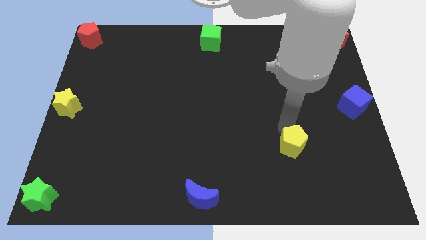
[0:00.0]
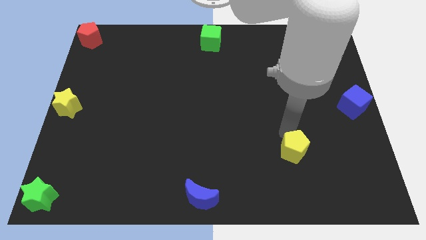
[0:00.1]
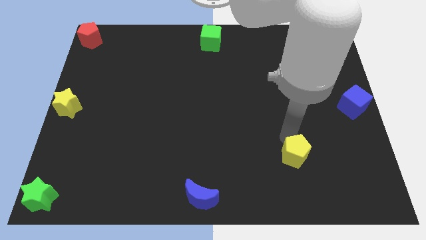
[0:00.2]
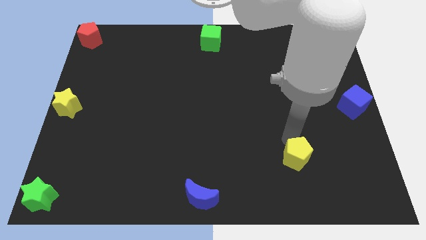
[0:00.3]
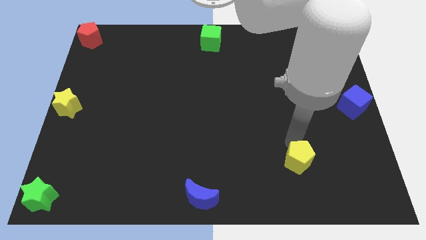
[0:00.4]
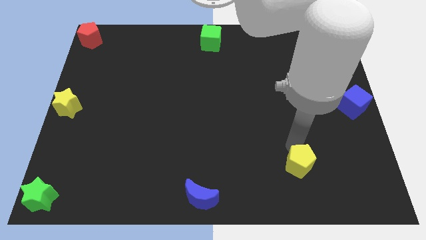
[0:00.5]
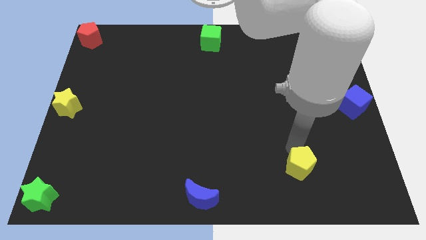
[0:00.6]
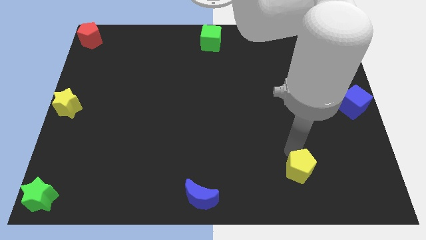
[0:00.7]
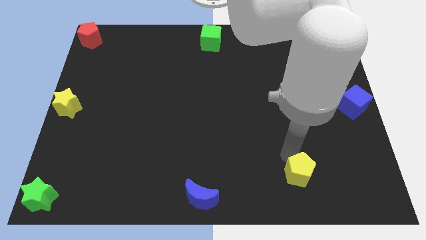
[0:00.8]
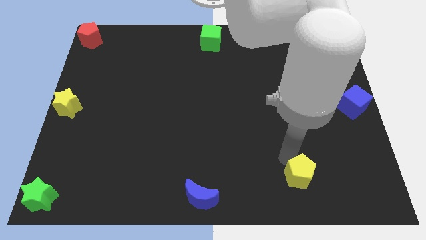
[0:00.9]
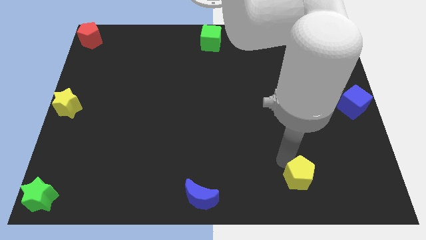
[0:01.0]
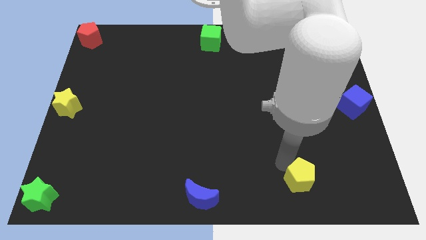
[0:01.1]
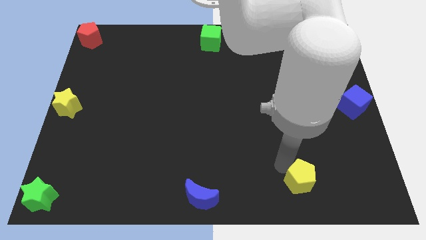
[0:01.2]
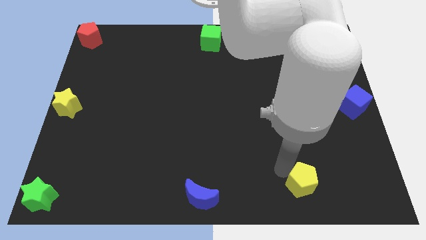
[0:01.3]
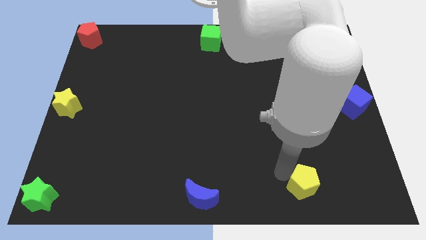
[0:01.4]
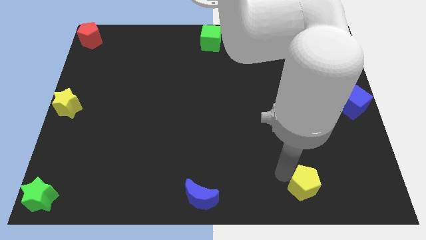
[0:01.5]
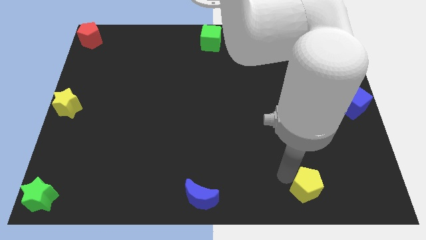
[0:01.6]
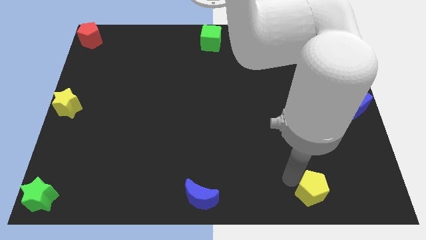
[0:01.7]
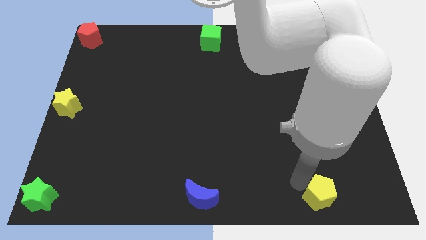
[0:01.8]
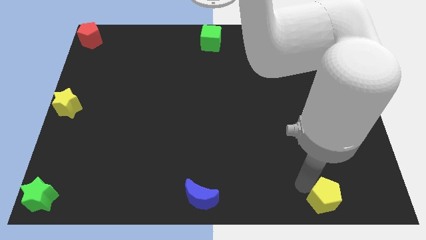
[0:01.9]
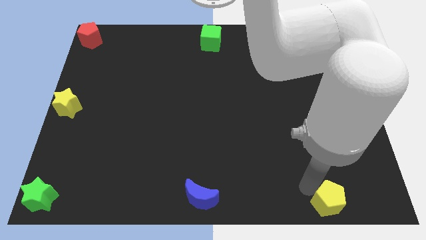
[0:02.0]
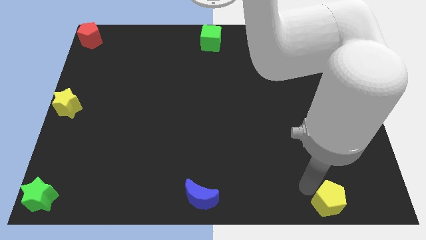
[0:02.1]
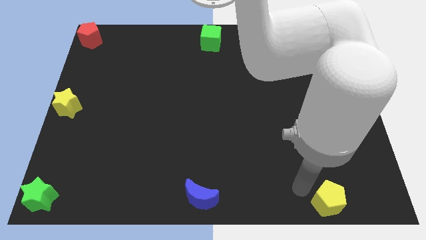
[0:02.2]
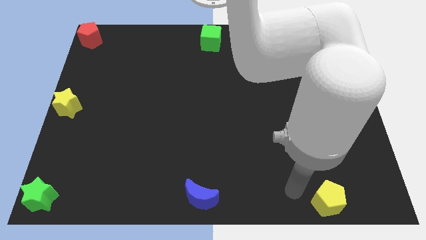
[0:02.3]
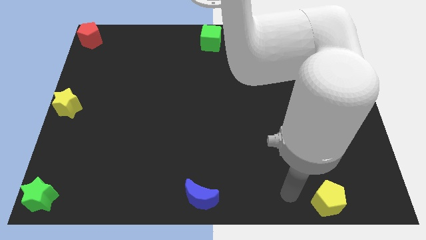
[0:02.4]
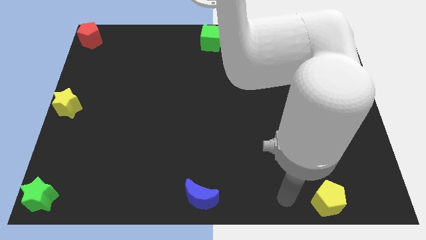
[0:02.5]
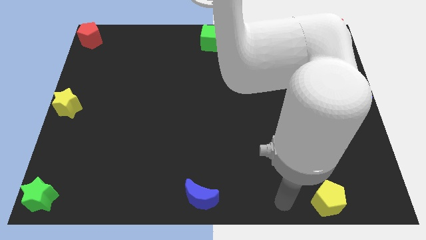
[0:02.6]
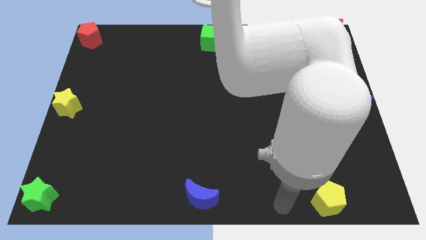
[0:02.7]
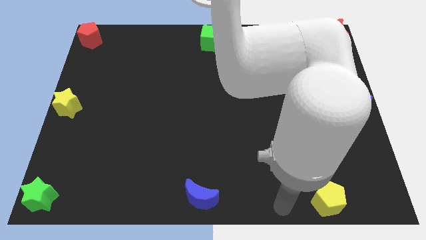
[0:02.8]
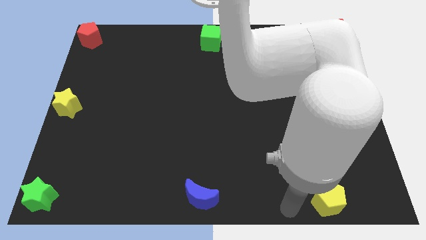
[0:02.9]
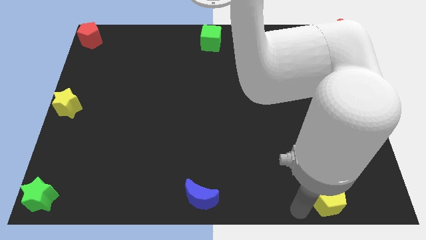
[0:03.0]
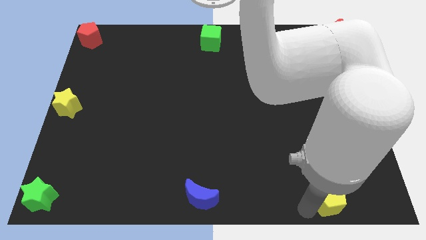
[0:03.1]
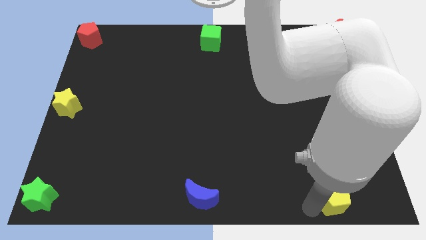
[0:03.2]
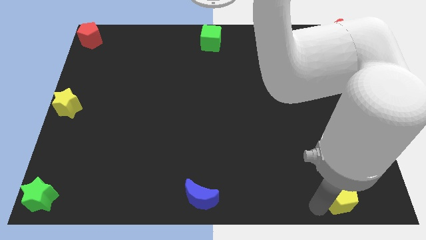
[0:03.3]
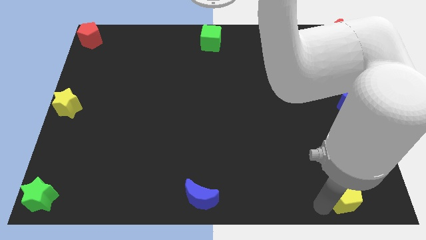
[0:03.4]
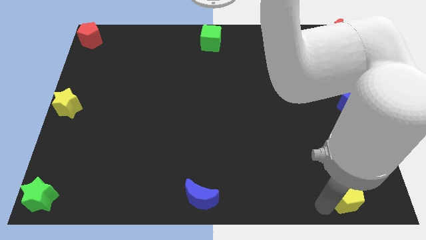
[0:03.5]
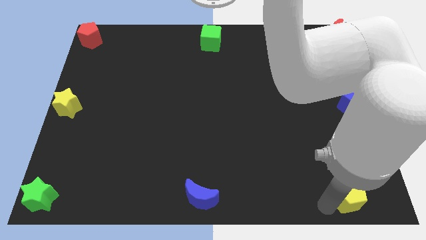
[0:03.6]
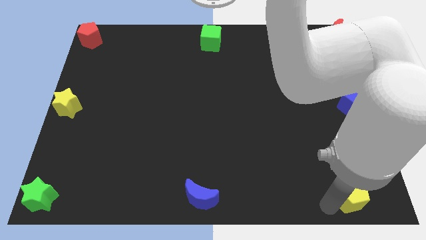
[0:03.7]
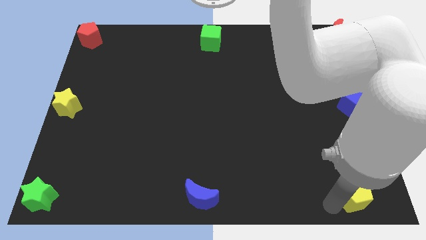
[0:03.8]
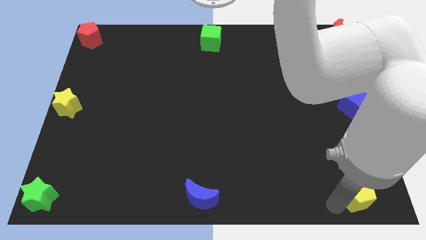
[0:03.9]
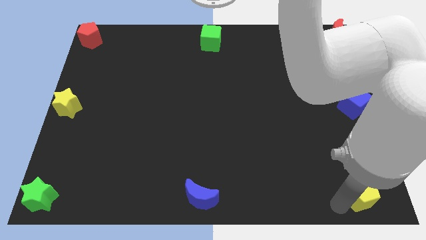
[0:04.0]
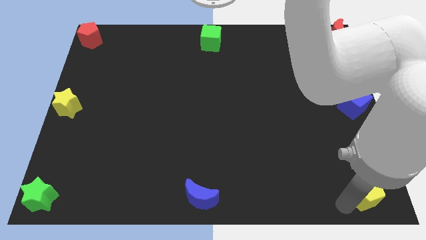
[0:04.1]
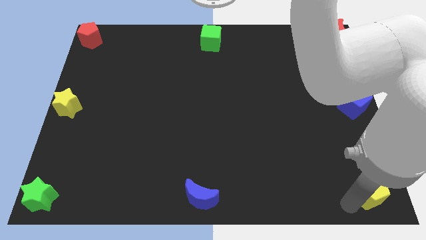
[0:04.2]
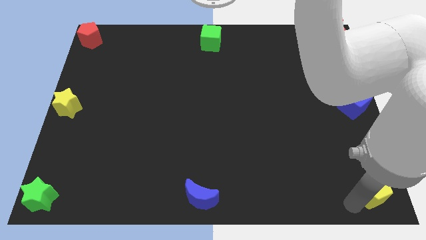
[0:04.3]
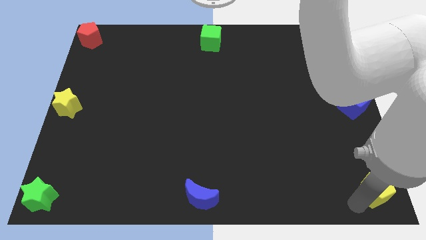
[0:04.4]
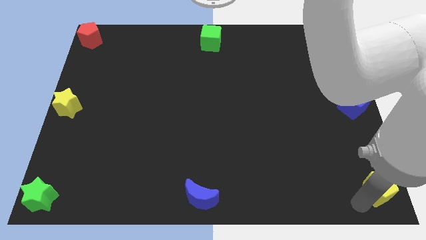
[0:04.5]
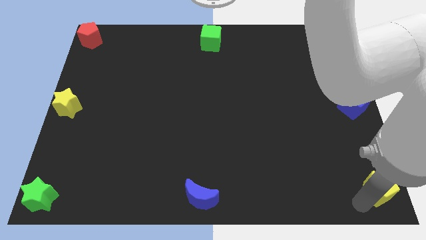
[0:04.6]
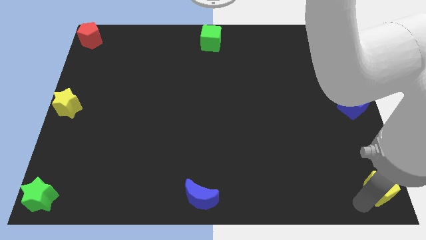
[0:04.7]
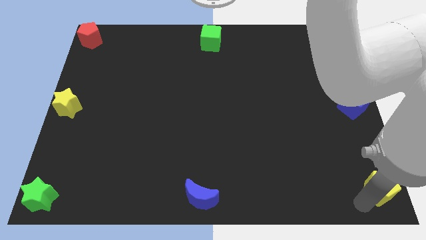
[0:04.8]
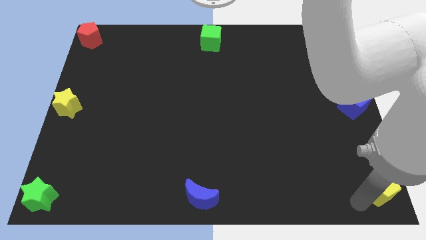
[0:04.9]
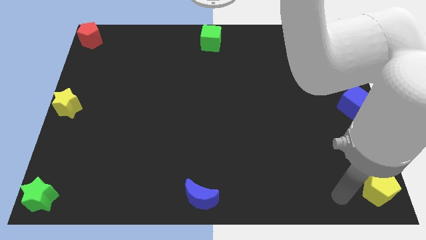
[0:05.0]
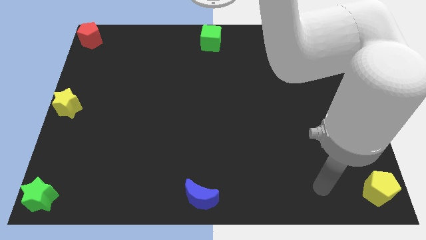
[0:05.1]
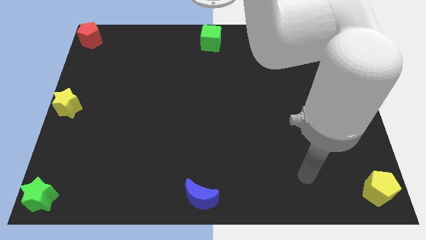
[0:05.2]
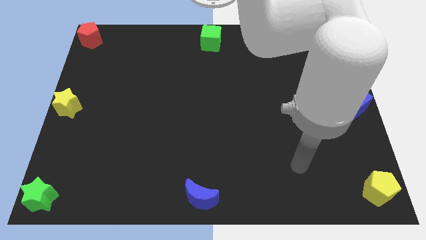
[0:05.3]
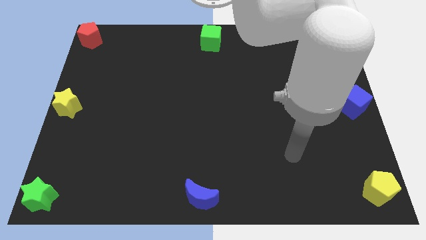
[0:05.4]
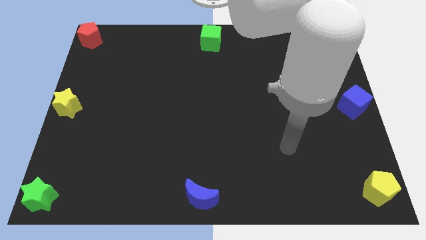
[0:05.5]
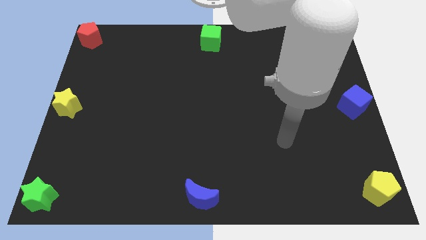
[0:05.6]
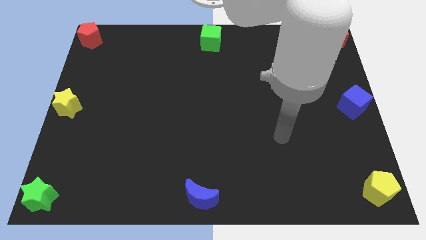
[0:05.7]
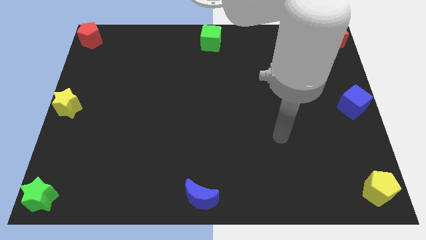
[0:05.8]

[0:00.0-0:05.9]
move the yellow pentagon to the bottom right of the board

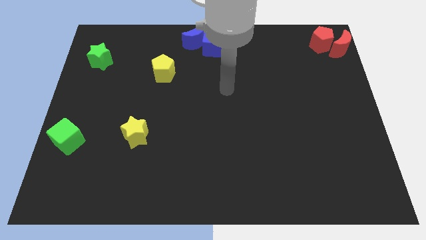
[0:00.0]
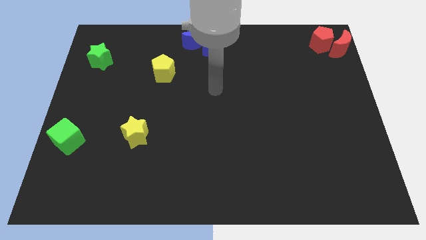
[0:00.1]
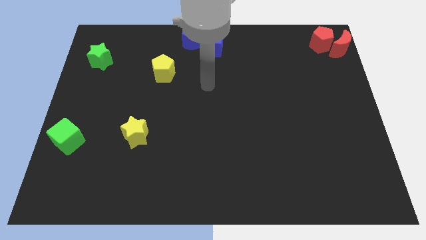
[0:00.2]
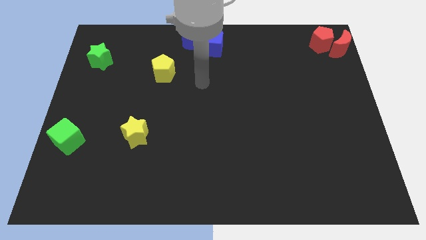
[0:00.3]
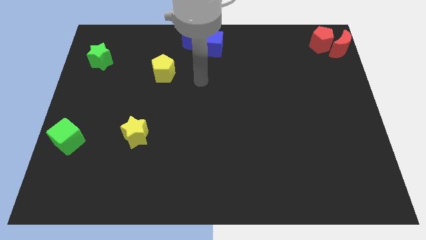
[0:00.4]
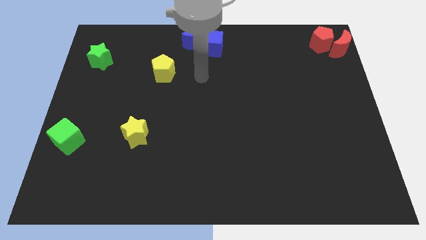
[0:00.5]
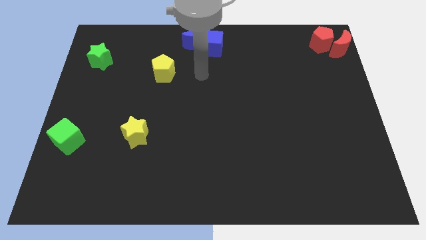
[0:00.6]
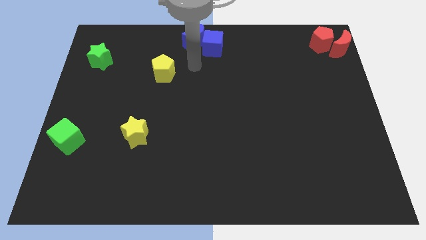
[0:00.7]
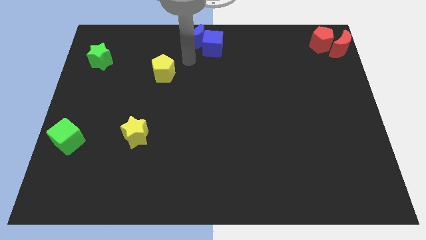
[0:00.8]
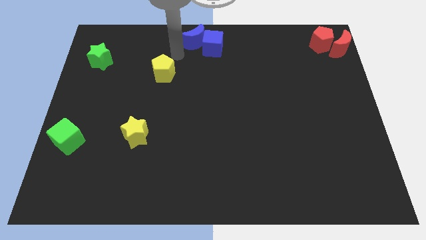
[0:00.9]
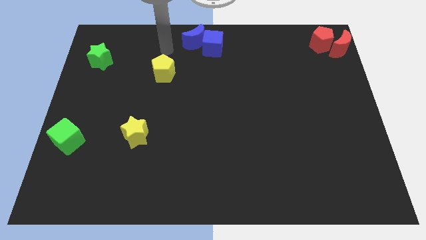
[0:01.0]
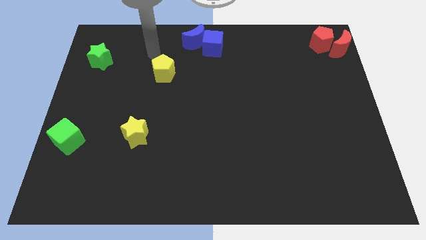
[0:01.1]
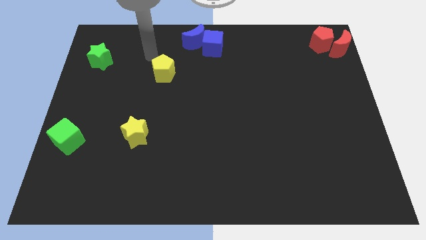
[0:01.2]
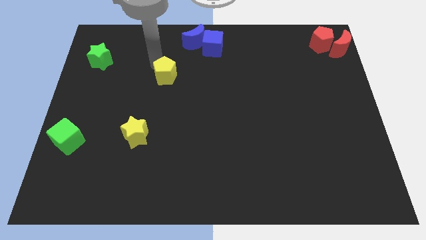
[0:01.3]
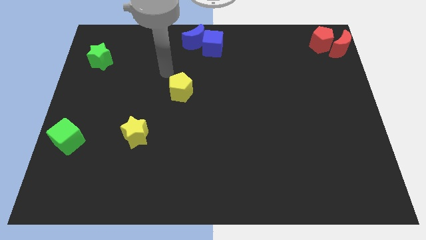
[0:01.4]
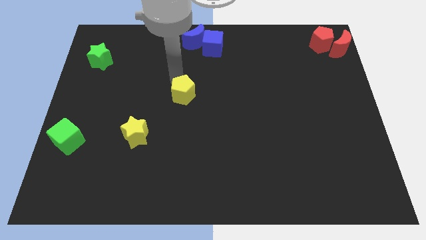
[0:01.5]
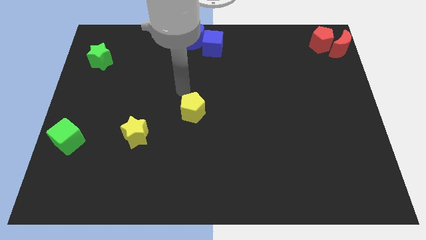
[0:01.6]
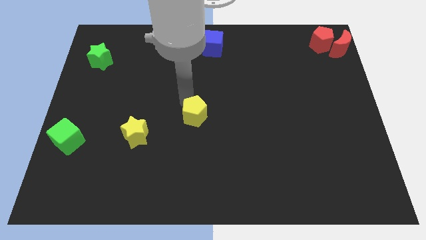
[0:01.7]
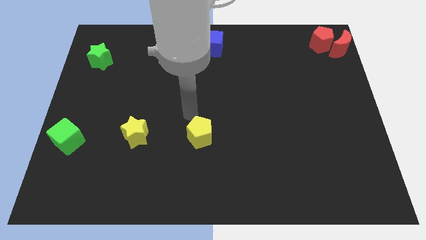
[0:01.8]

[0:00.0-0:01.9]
place the yellow pentagon parallel right to the yellow star

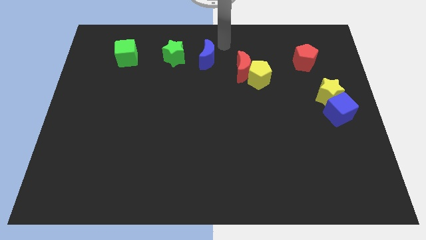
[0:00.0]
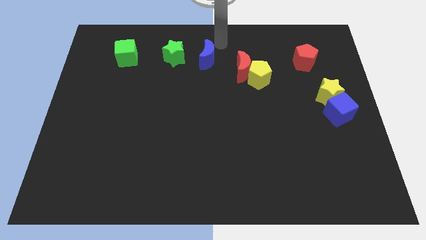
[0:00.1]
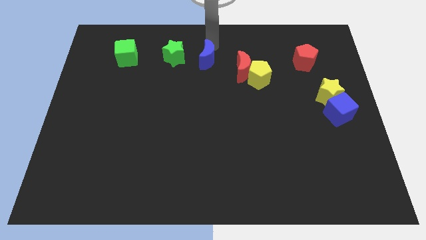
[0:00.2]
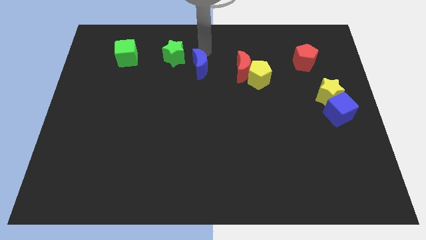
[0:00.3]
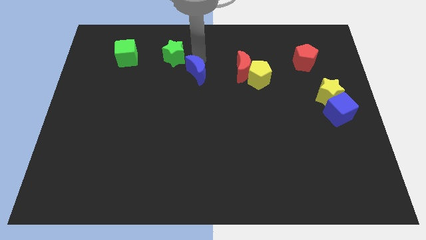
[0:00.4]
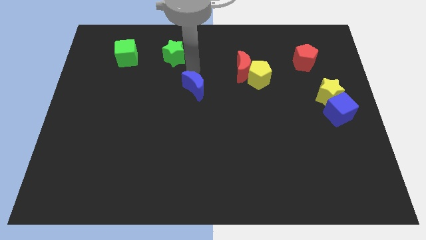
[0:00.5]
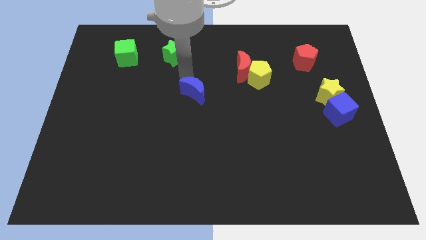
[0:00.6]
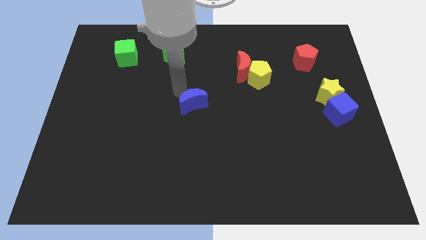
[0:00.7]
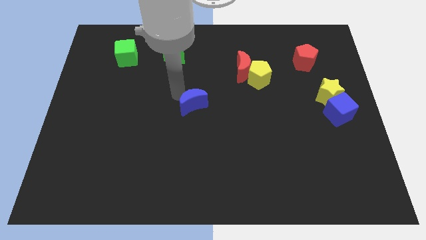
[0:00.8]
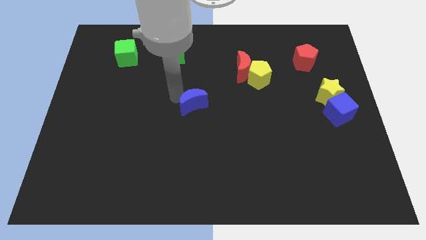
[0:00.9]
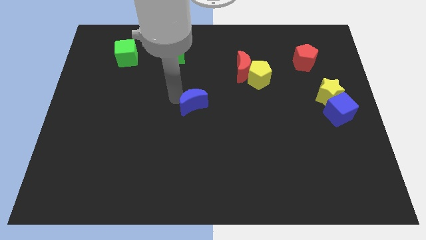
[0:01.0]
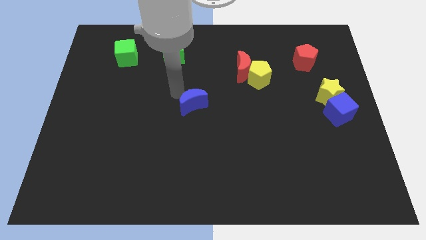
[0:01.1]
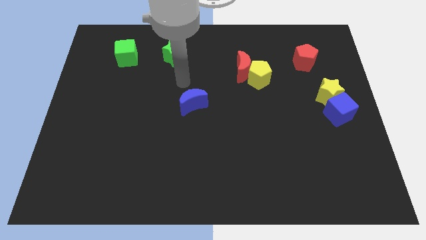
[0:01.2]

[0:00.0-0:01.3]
move the blue crescent to the center of the board
